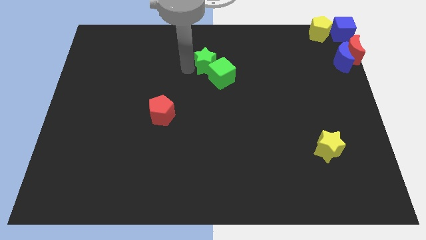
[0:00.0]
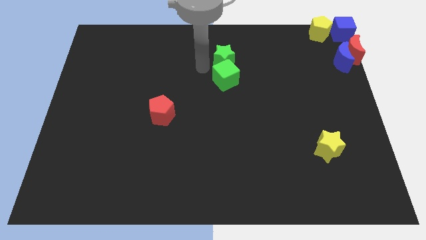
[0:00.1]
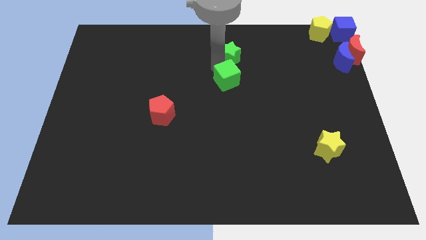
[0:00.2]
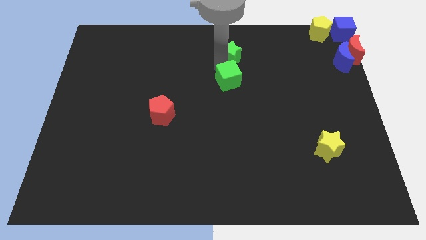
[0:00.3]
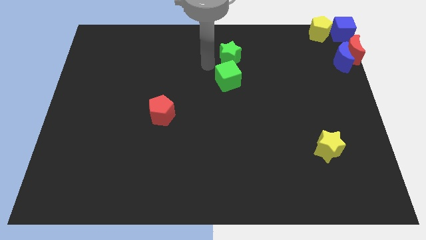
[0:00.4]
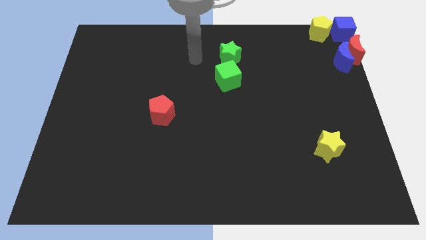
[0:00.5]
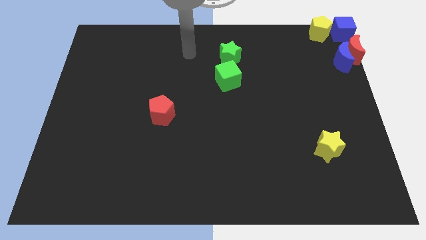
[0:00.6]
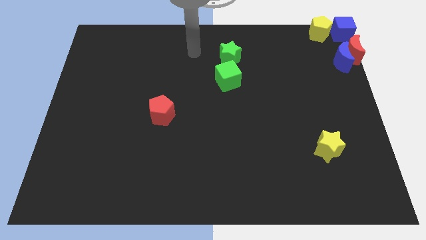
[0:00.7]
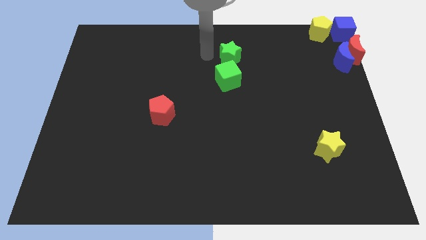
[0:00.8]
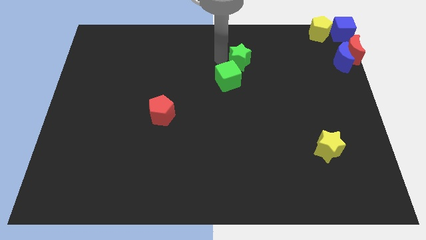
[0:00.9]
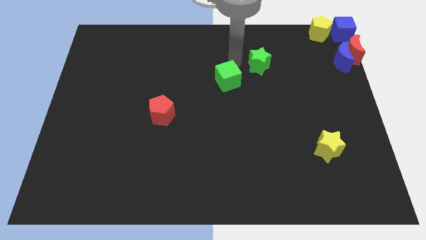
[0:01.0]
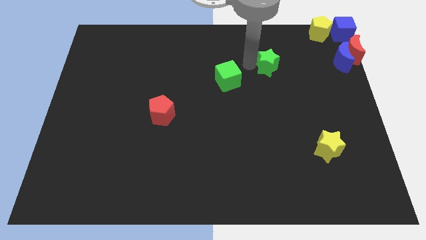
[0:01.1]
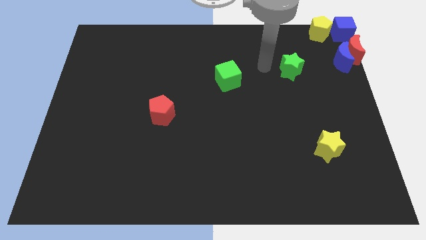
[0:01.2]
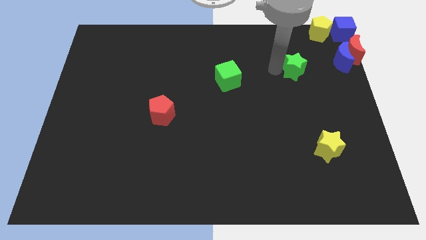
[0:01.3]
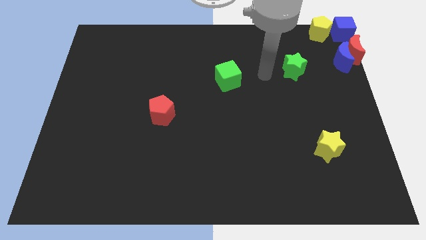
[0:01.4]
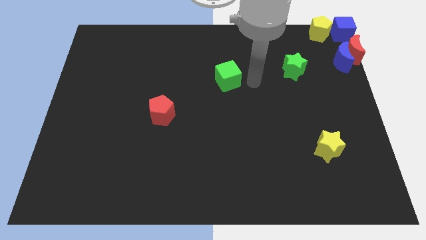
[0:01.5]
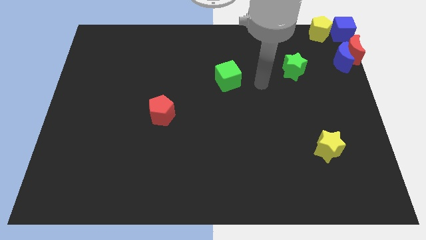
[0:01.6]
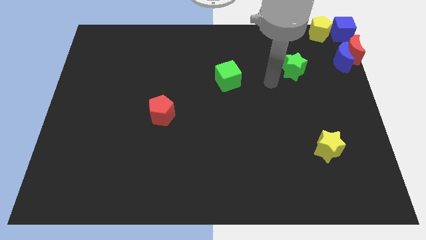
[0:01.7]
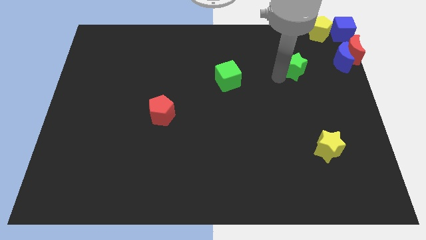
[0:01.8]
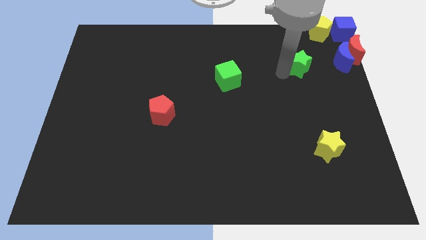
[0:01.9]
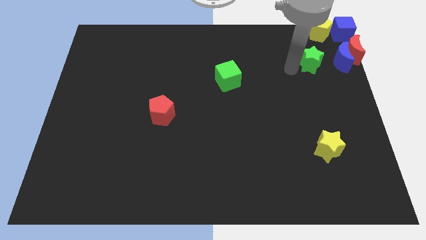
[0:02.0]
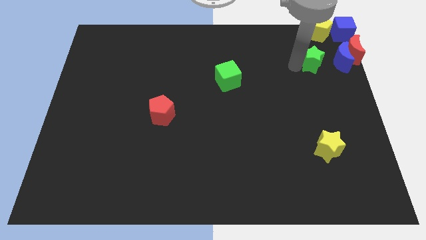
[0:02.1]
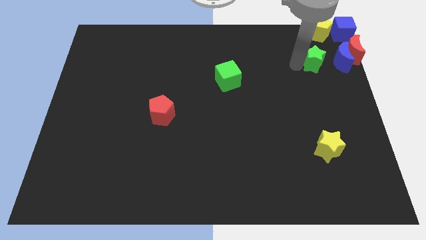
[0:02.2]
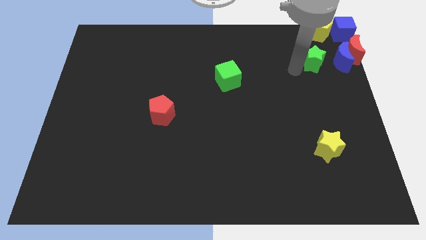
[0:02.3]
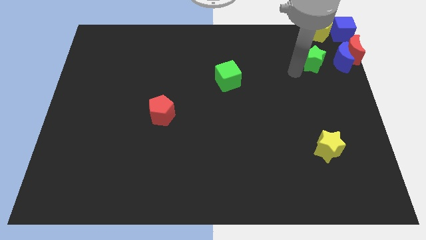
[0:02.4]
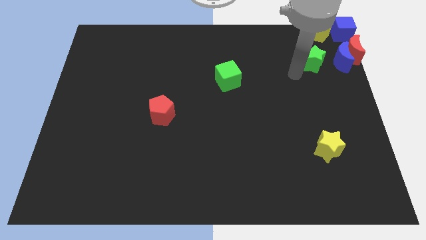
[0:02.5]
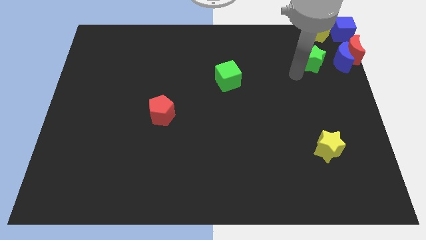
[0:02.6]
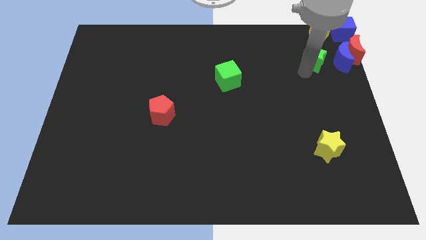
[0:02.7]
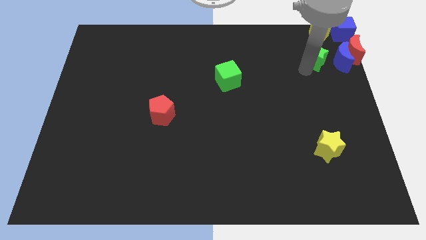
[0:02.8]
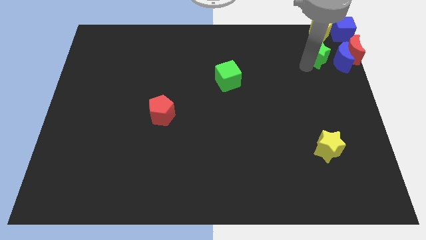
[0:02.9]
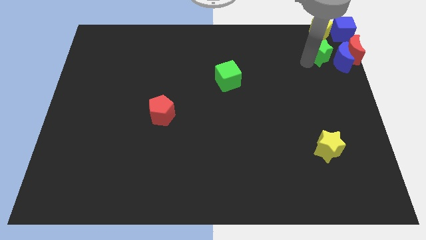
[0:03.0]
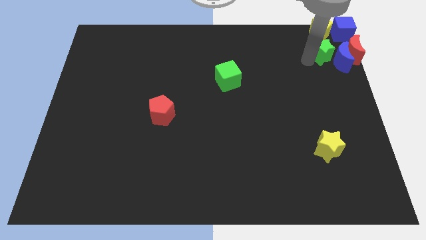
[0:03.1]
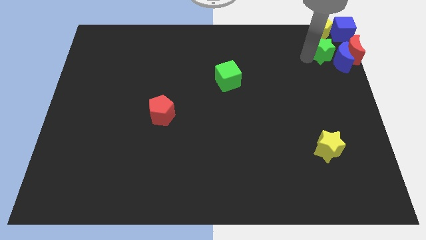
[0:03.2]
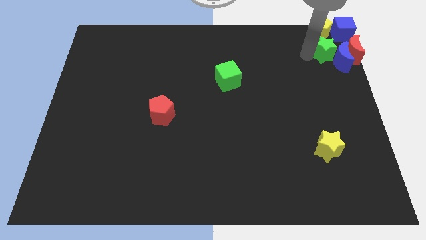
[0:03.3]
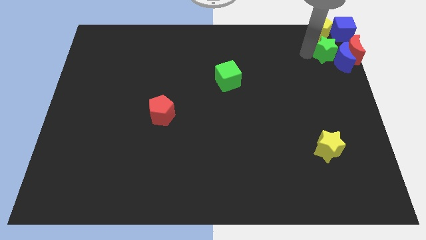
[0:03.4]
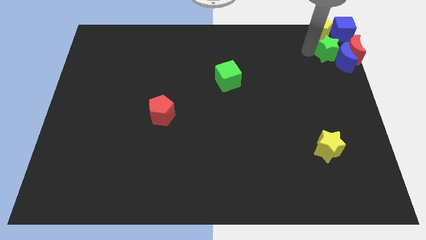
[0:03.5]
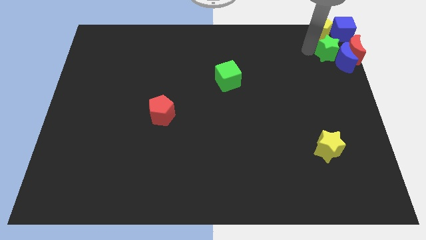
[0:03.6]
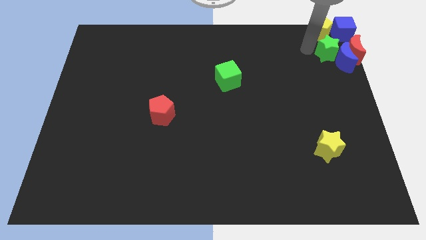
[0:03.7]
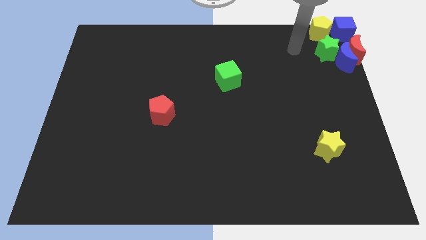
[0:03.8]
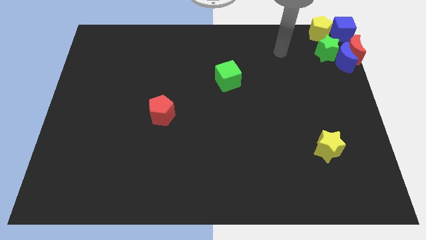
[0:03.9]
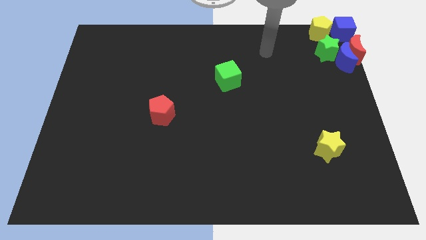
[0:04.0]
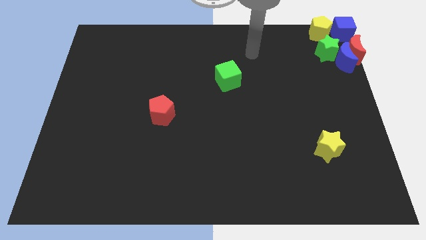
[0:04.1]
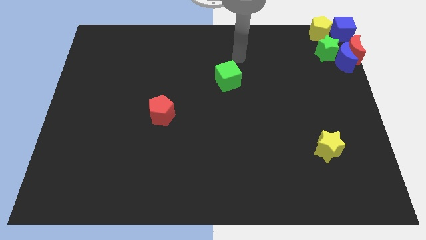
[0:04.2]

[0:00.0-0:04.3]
push the green star into the group of blocks

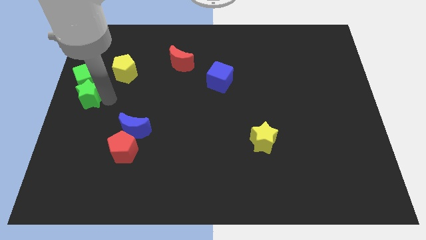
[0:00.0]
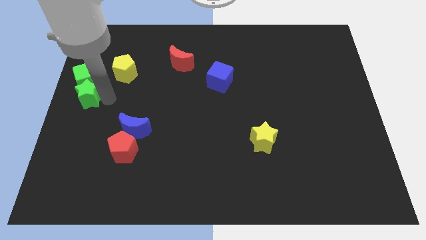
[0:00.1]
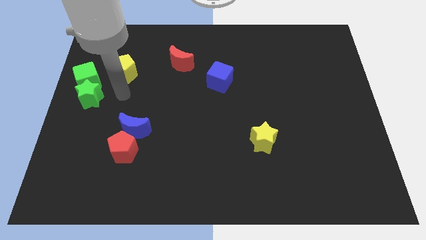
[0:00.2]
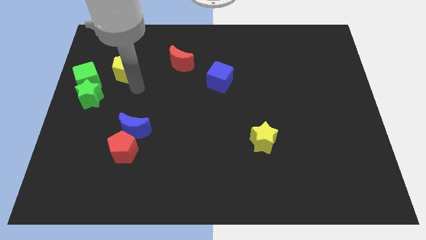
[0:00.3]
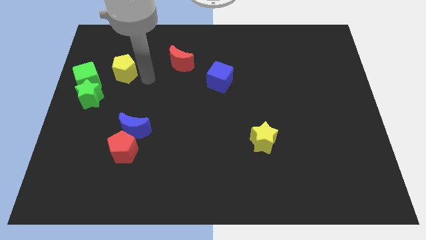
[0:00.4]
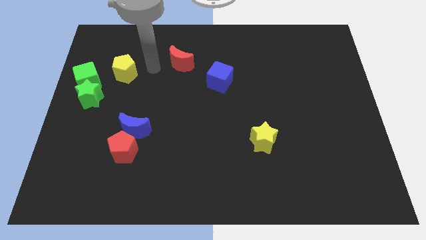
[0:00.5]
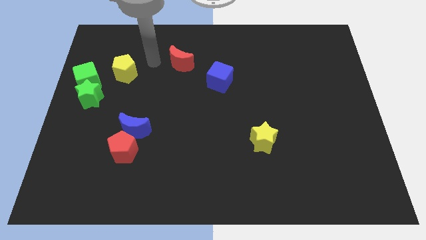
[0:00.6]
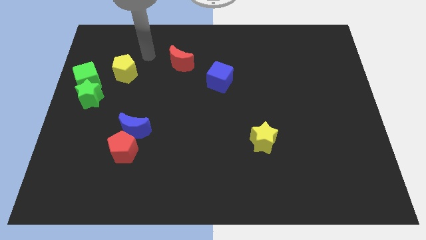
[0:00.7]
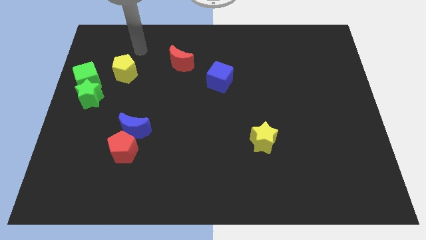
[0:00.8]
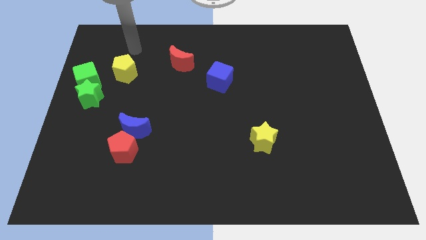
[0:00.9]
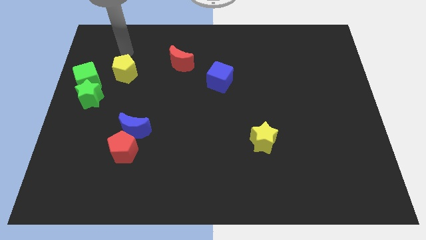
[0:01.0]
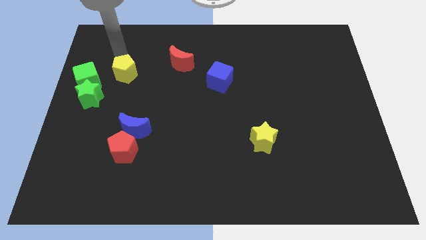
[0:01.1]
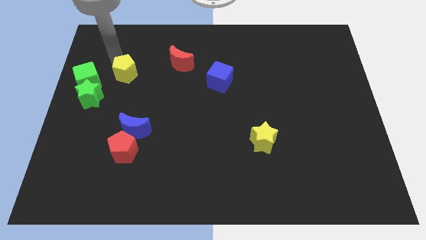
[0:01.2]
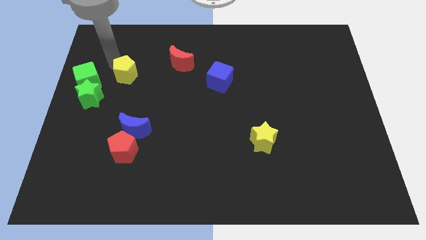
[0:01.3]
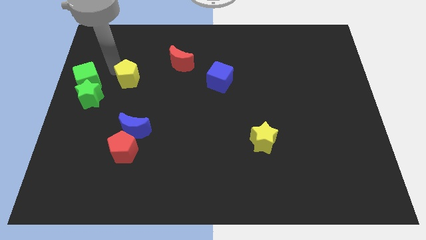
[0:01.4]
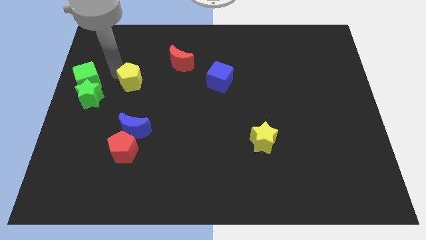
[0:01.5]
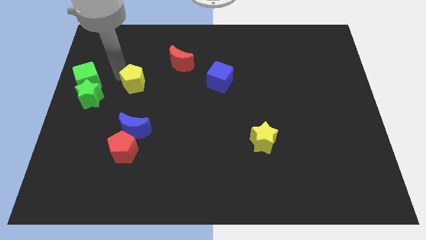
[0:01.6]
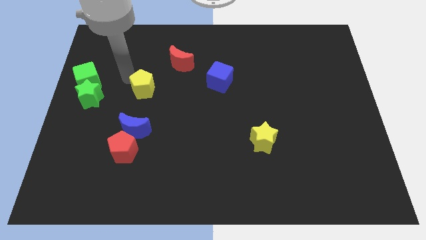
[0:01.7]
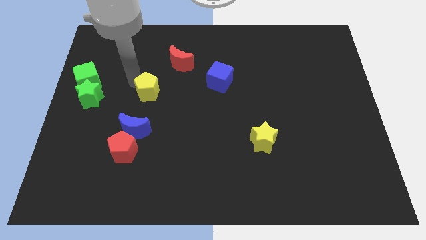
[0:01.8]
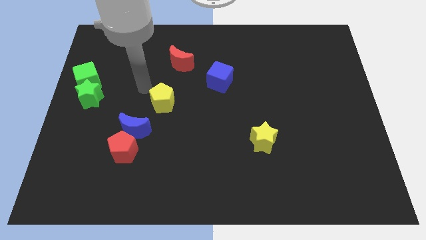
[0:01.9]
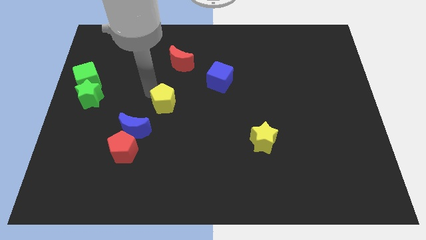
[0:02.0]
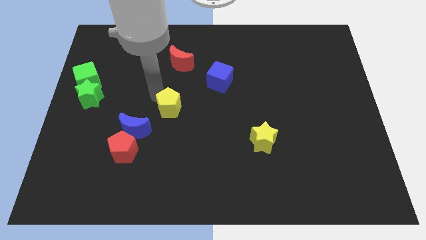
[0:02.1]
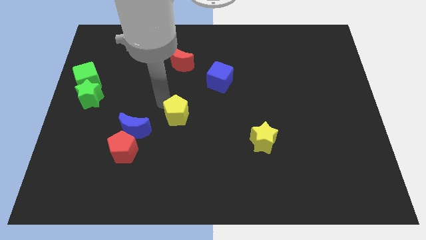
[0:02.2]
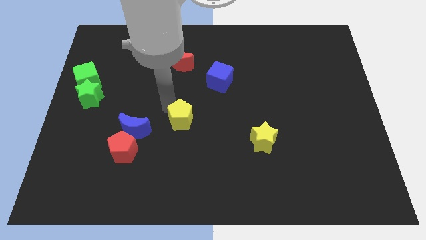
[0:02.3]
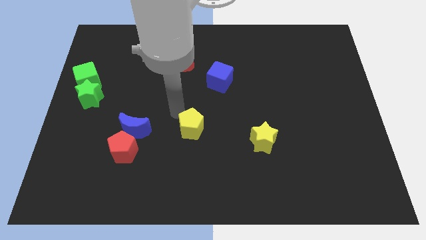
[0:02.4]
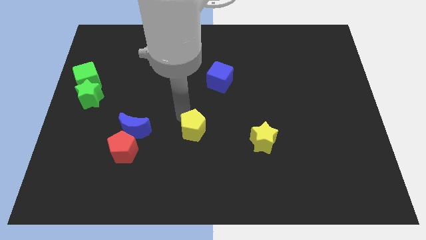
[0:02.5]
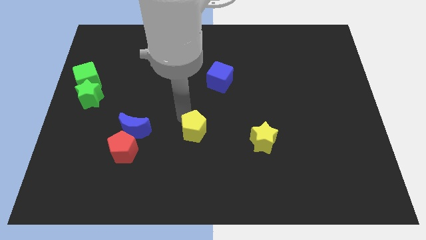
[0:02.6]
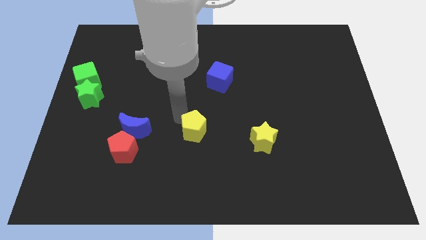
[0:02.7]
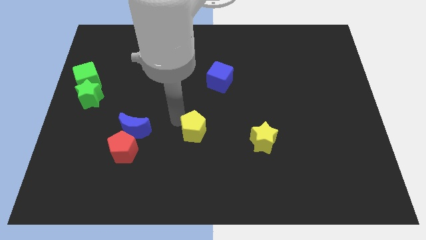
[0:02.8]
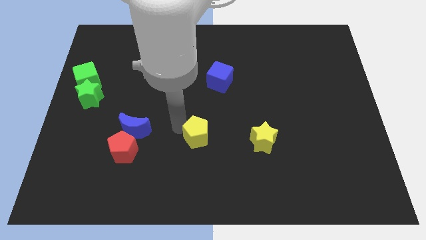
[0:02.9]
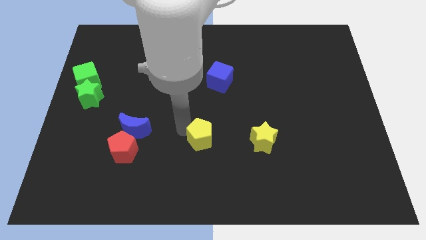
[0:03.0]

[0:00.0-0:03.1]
push the yellow pentagon slightly left to yellow star

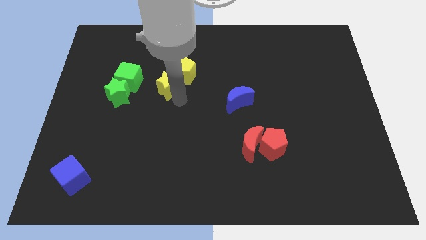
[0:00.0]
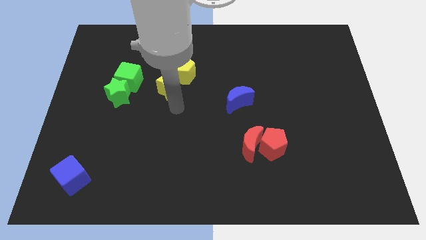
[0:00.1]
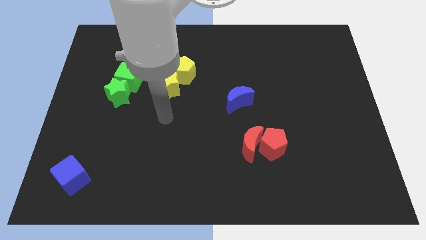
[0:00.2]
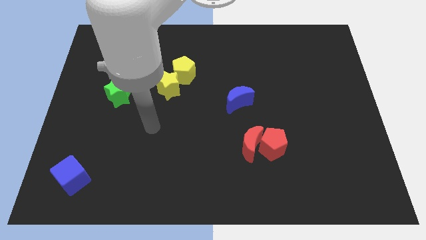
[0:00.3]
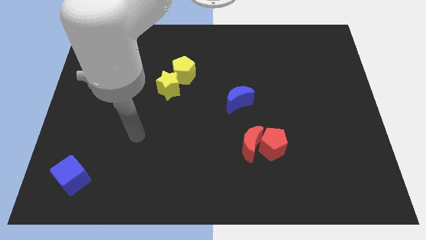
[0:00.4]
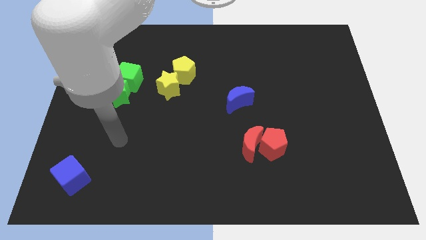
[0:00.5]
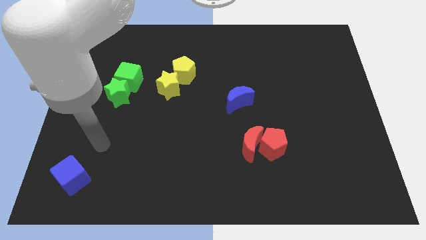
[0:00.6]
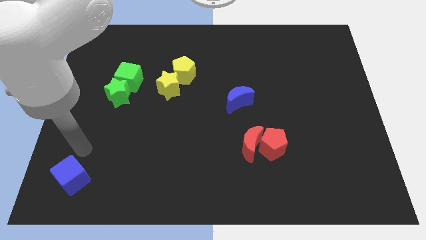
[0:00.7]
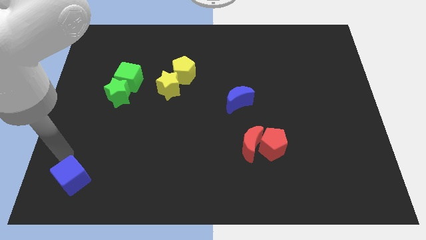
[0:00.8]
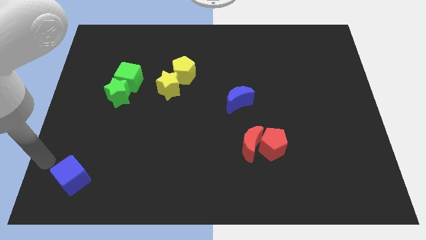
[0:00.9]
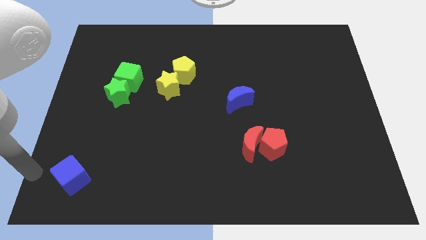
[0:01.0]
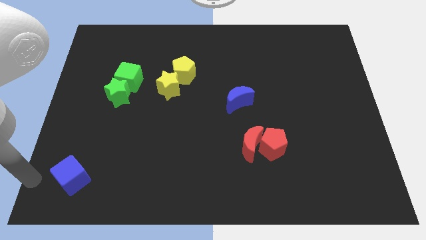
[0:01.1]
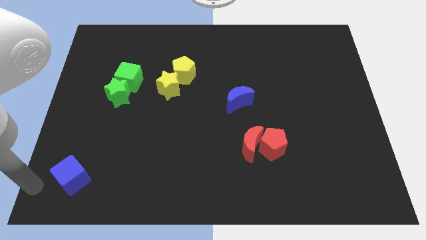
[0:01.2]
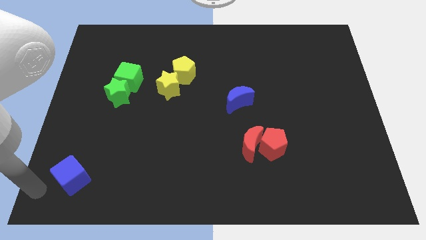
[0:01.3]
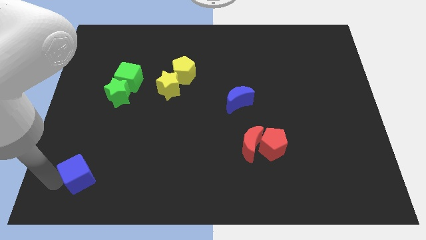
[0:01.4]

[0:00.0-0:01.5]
place your arm closer to the blue cube

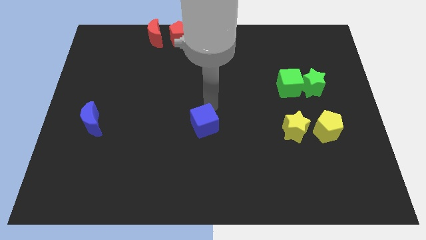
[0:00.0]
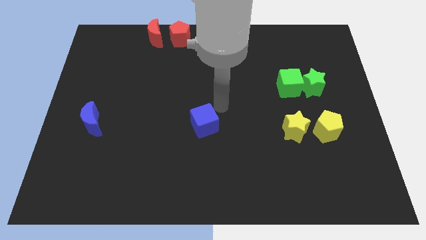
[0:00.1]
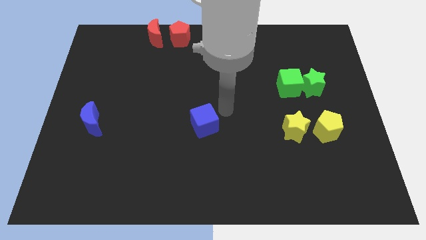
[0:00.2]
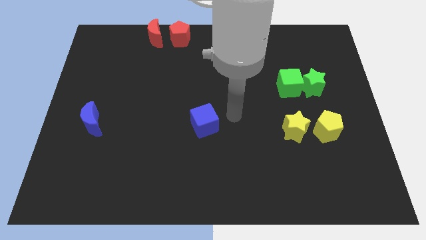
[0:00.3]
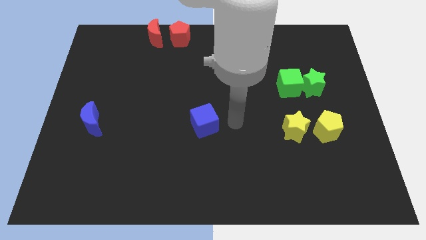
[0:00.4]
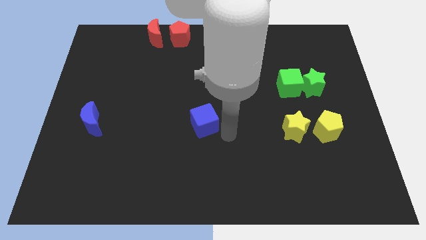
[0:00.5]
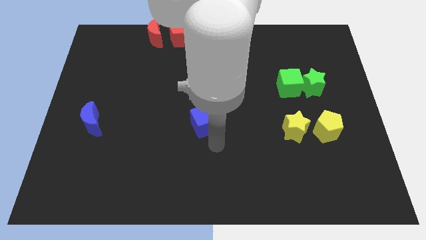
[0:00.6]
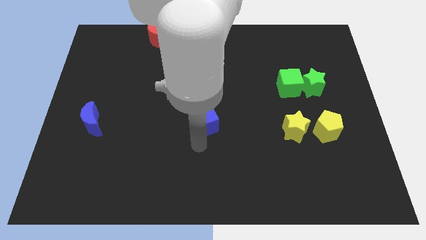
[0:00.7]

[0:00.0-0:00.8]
move your arm to the bottom side of the blue cube
